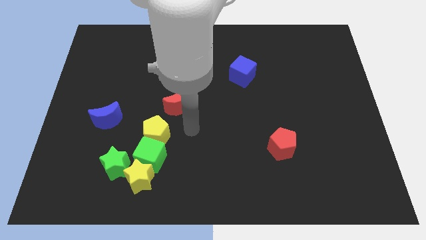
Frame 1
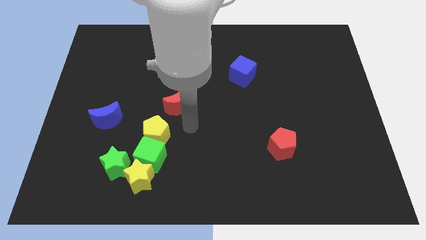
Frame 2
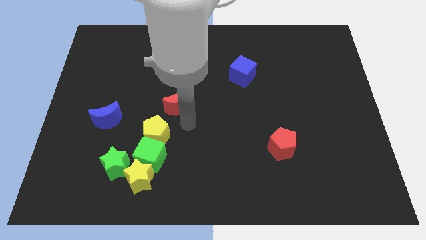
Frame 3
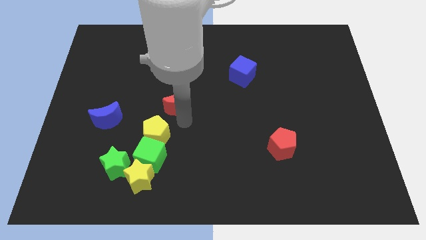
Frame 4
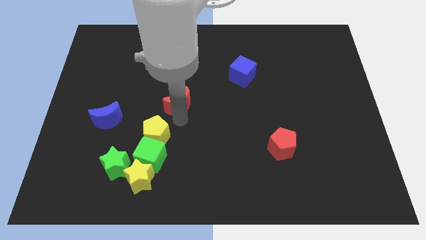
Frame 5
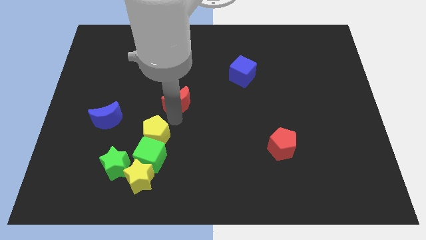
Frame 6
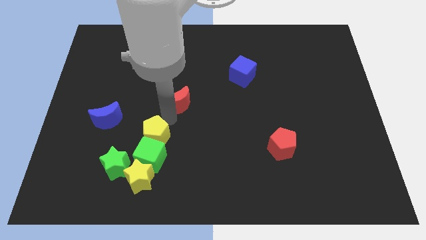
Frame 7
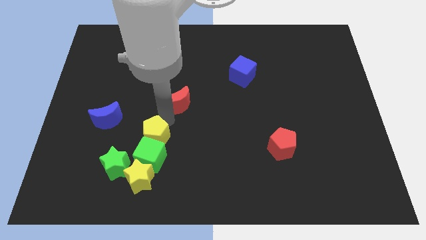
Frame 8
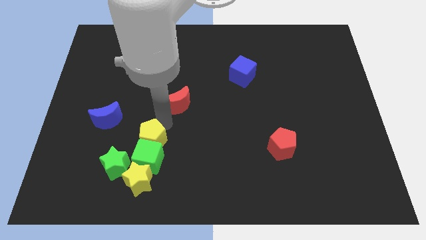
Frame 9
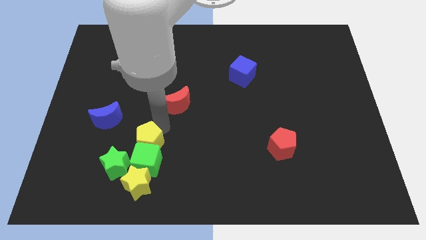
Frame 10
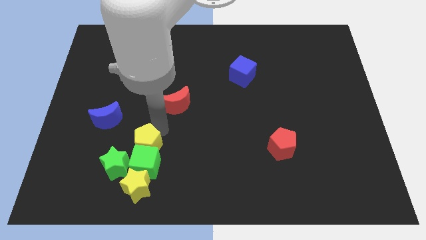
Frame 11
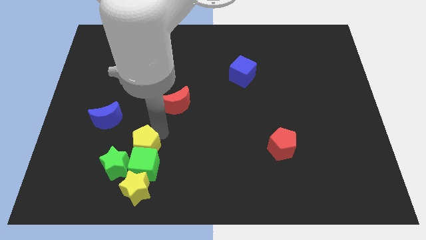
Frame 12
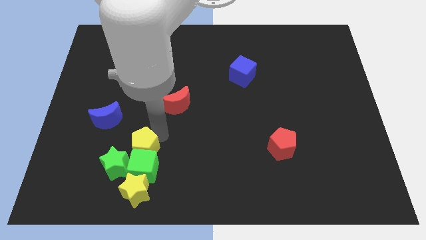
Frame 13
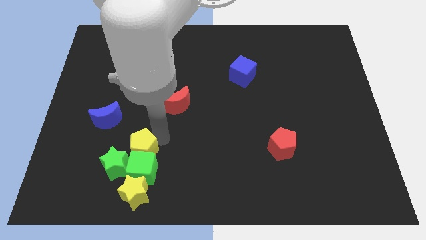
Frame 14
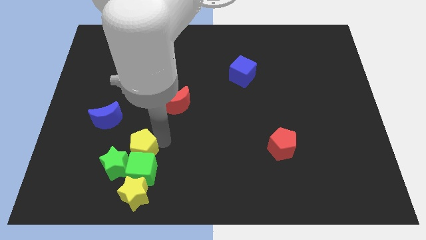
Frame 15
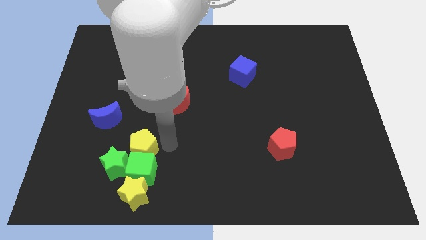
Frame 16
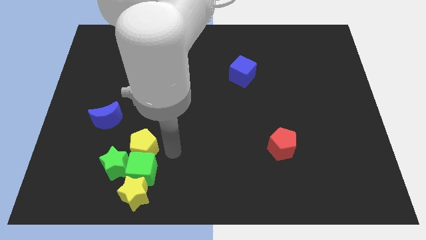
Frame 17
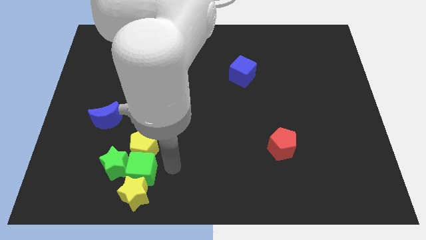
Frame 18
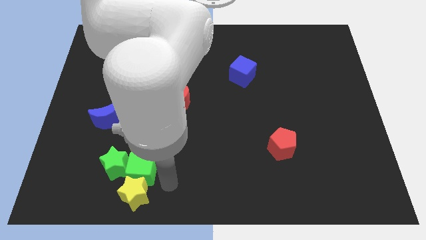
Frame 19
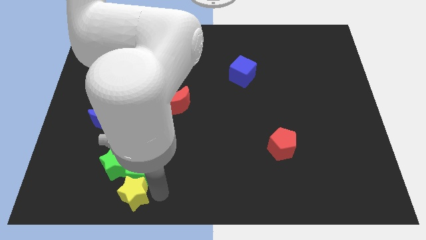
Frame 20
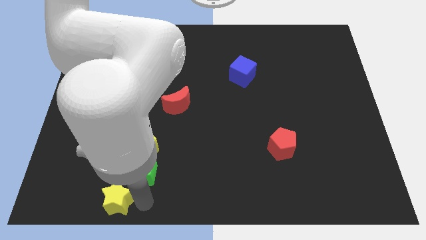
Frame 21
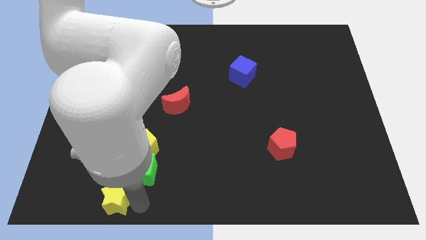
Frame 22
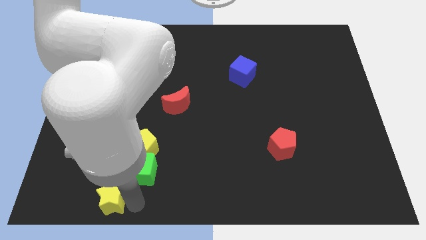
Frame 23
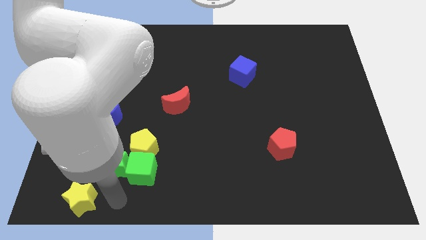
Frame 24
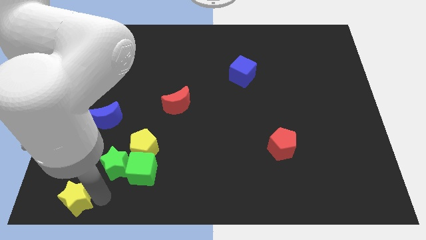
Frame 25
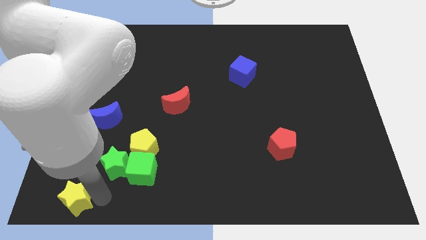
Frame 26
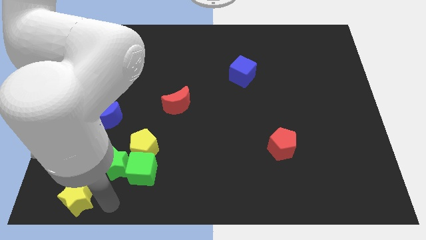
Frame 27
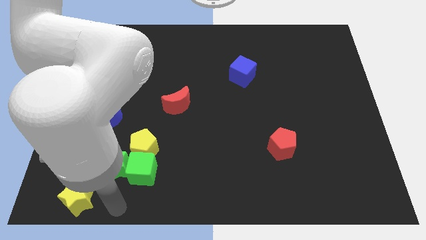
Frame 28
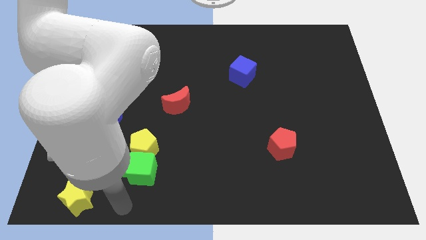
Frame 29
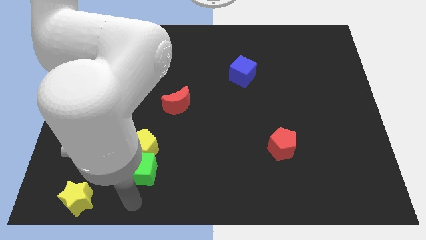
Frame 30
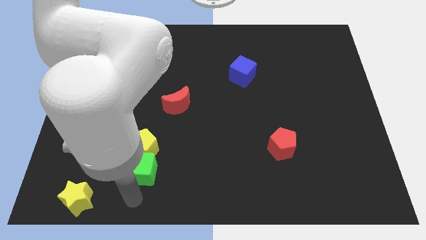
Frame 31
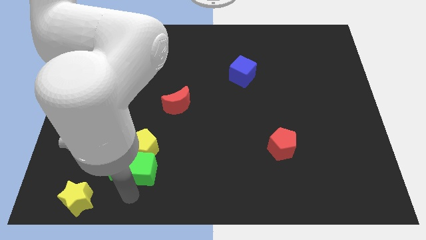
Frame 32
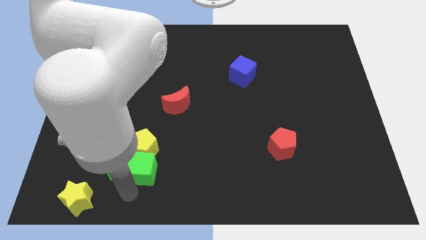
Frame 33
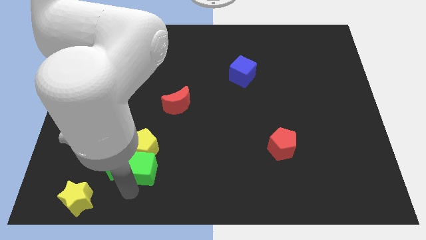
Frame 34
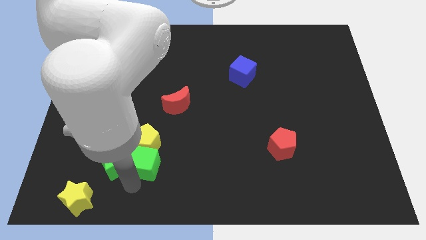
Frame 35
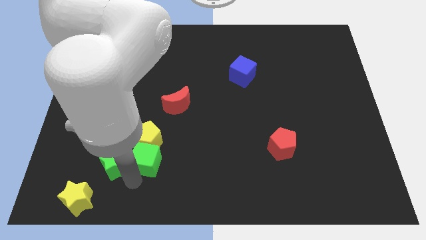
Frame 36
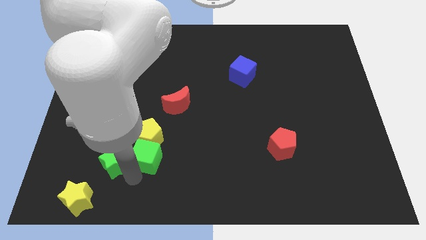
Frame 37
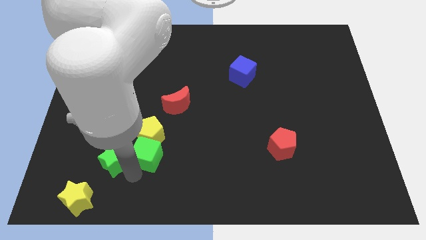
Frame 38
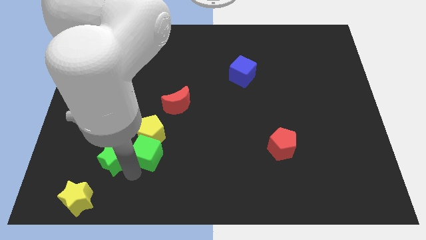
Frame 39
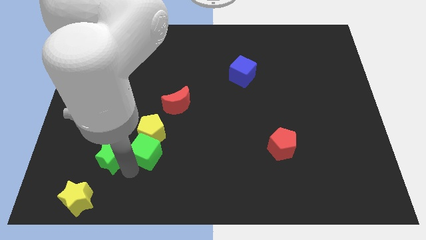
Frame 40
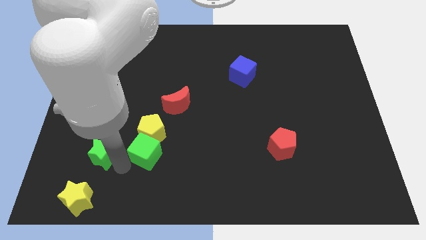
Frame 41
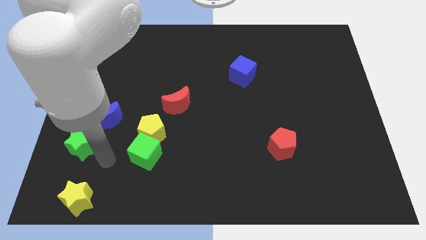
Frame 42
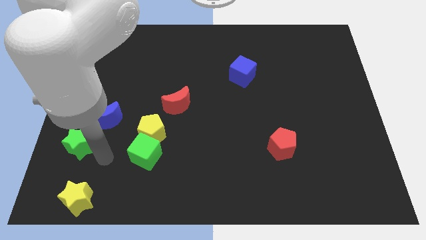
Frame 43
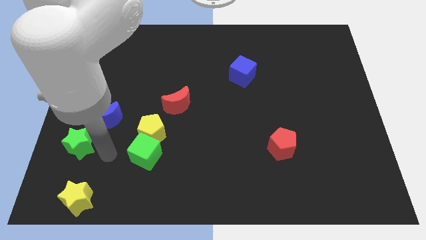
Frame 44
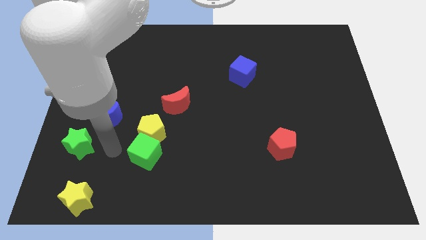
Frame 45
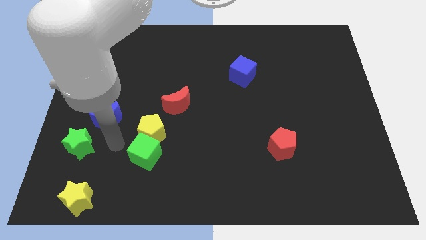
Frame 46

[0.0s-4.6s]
move the green star parallel to the top of the yellow star

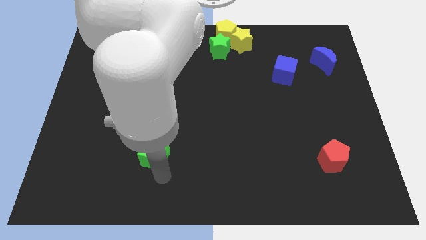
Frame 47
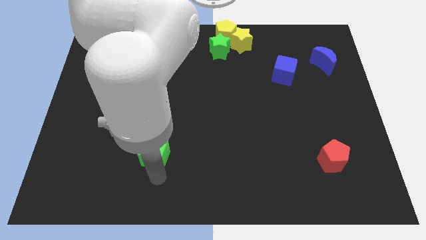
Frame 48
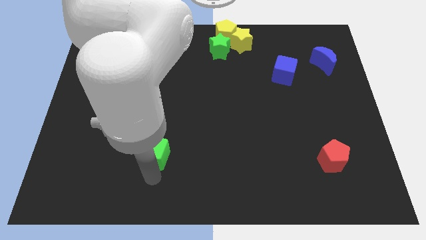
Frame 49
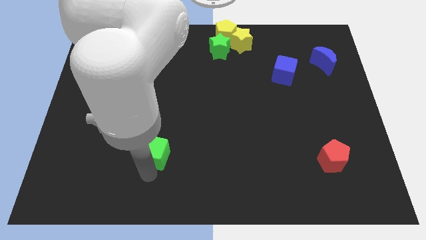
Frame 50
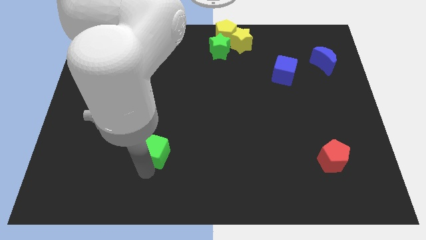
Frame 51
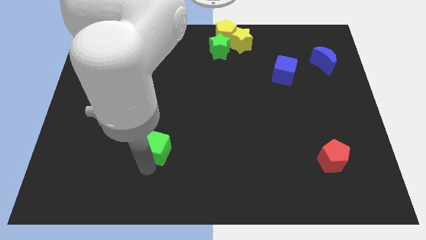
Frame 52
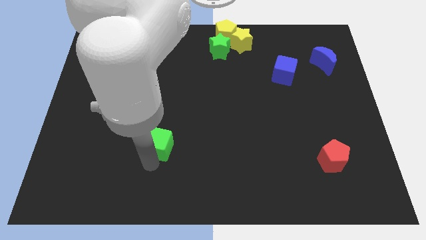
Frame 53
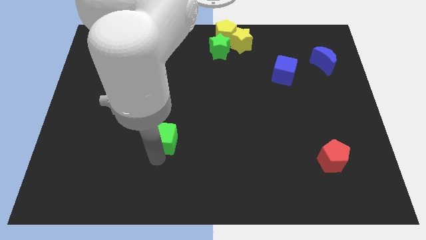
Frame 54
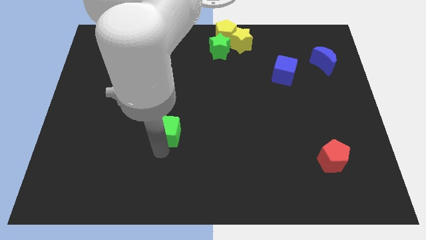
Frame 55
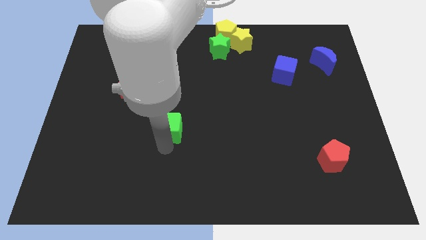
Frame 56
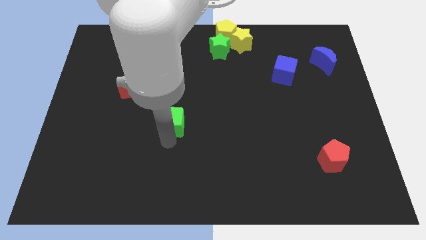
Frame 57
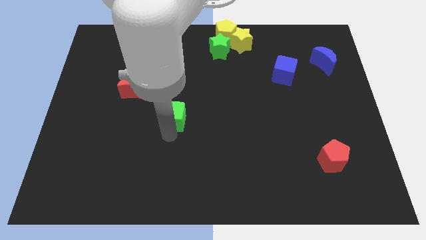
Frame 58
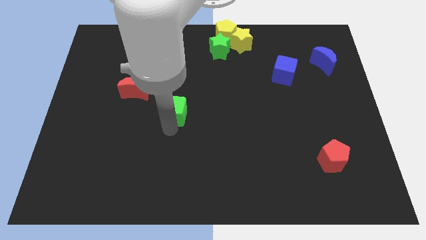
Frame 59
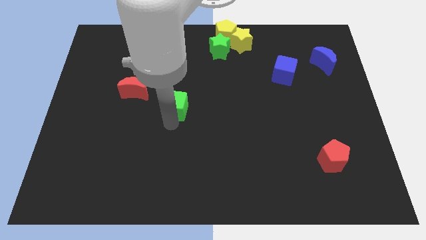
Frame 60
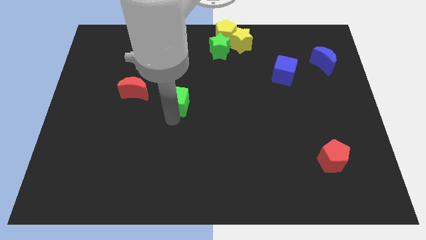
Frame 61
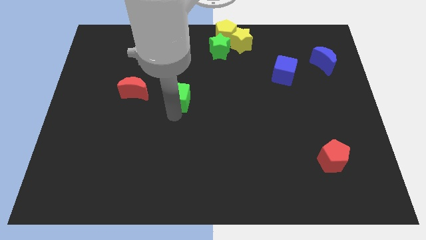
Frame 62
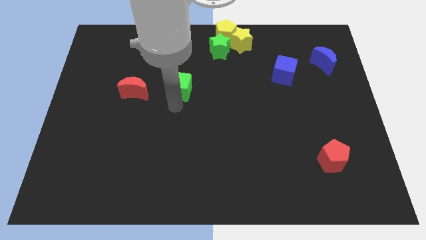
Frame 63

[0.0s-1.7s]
move green cube to the right of the red crescent

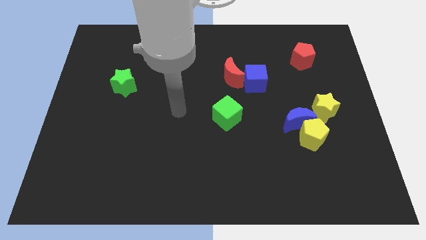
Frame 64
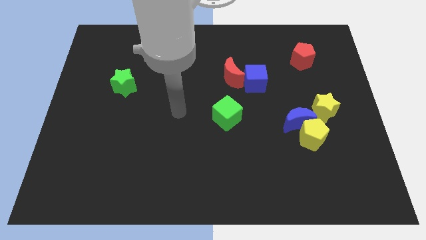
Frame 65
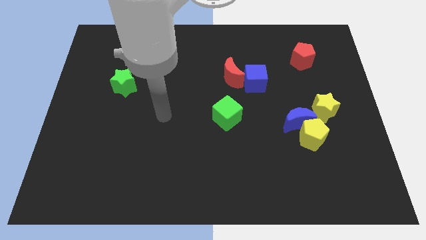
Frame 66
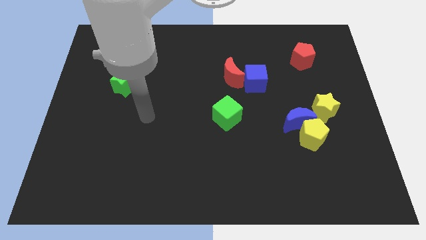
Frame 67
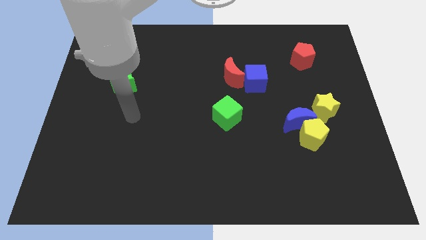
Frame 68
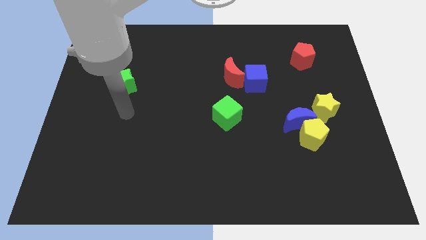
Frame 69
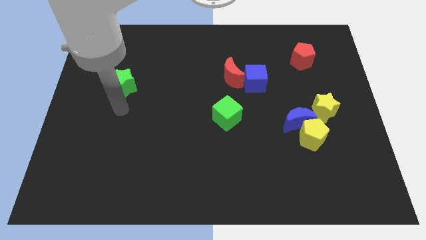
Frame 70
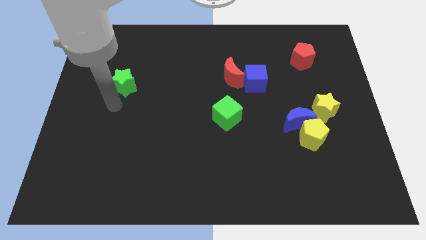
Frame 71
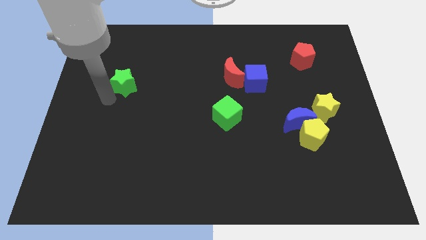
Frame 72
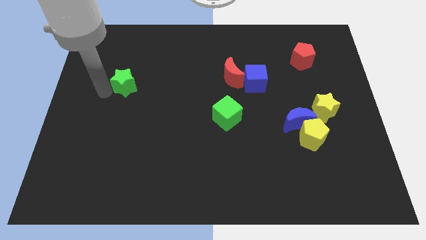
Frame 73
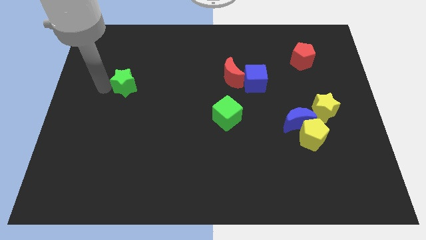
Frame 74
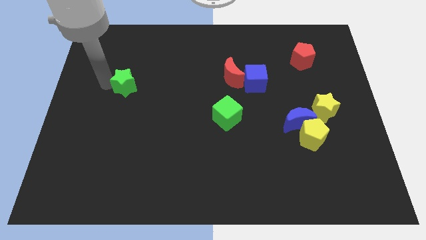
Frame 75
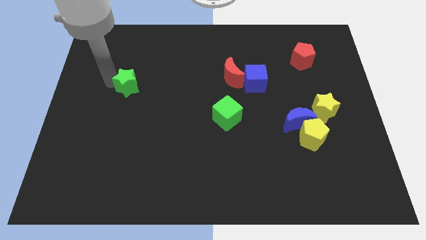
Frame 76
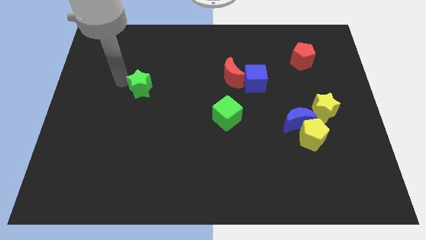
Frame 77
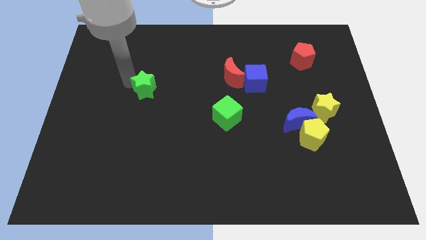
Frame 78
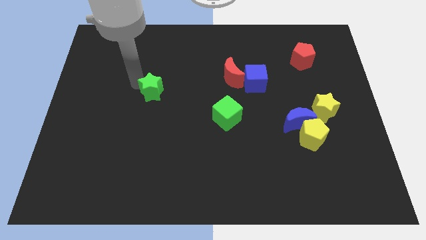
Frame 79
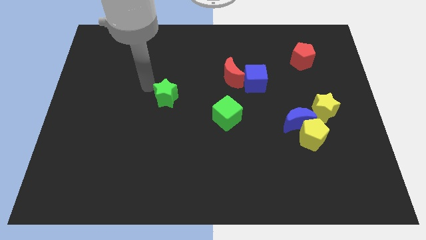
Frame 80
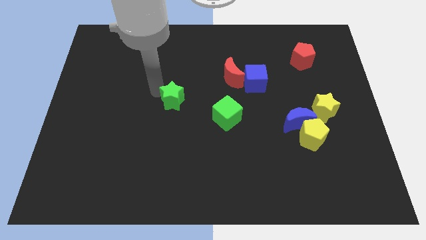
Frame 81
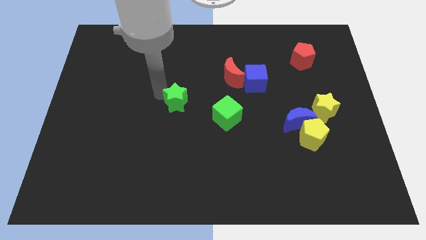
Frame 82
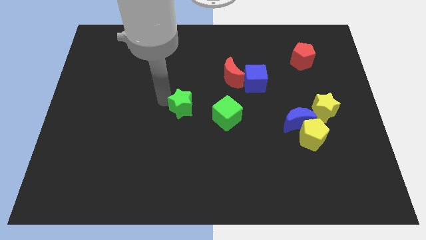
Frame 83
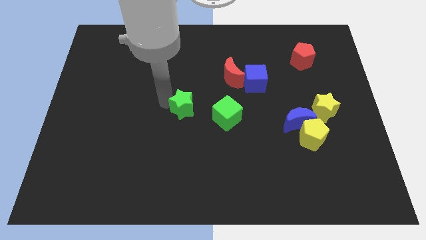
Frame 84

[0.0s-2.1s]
move the green star to the center of the board

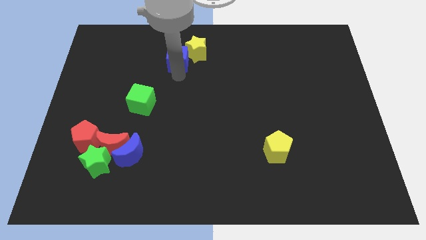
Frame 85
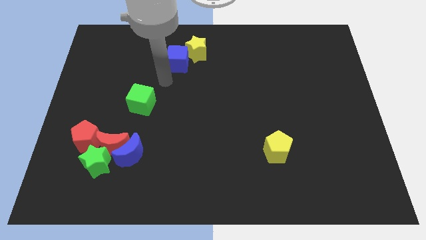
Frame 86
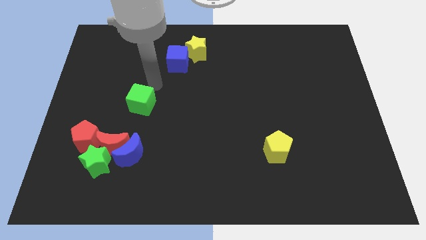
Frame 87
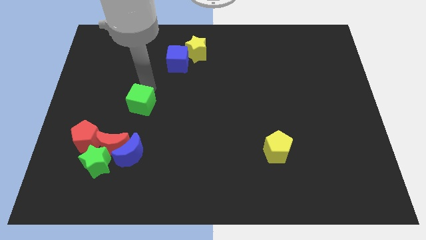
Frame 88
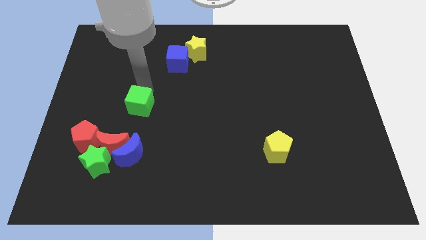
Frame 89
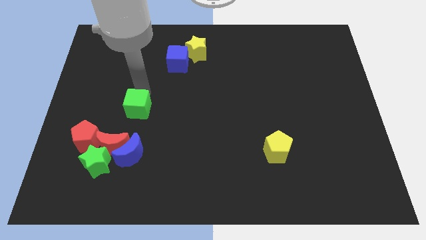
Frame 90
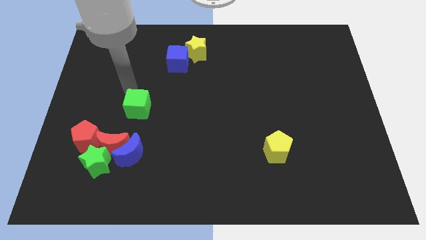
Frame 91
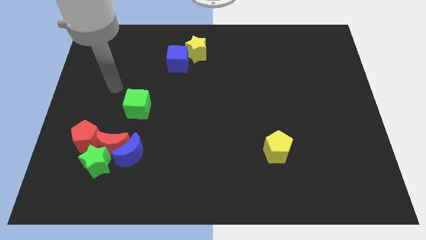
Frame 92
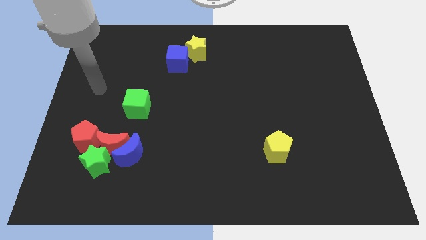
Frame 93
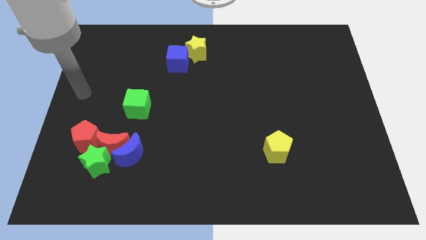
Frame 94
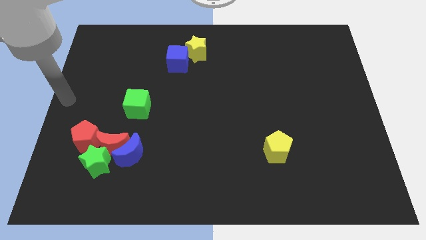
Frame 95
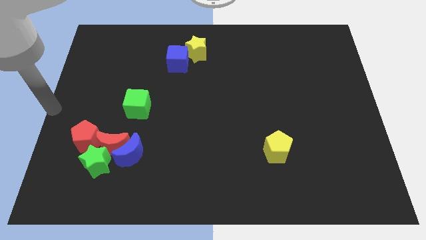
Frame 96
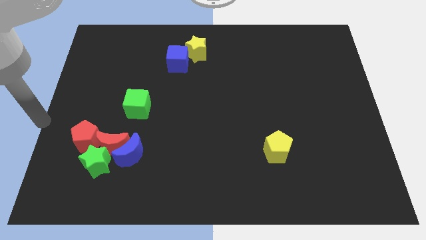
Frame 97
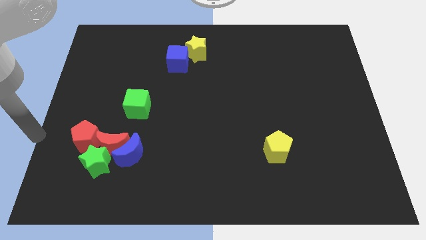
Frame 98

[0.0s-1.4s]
push the green cube slightly to the bottom side of the board
